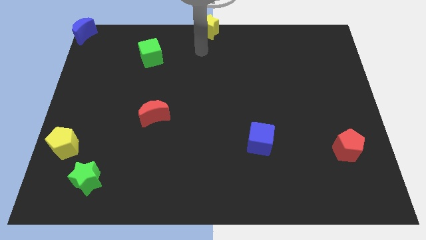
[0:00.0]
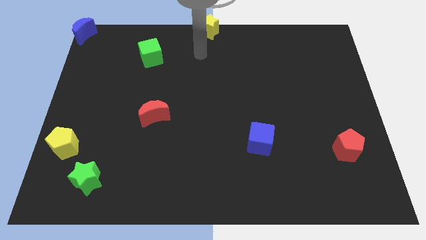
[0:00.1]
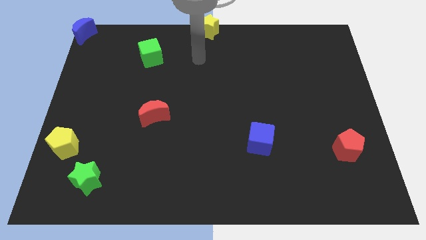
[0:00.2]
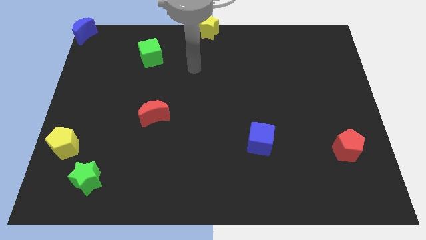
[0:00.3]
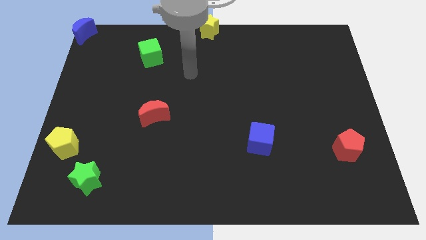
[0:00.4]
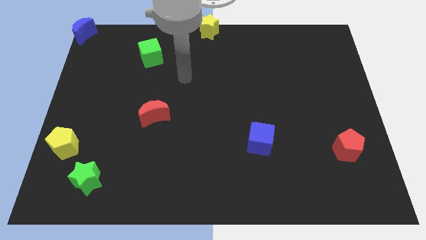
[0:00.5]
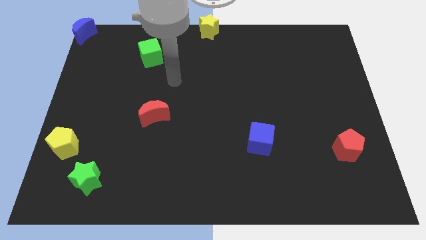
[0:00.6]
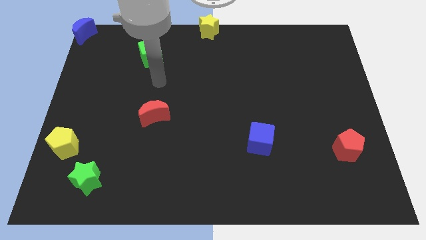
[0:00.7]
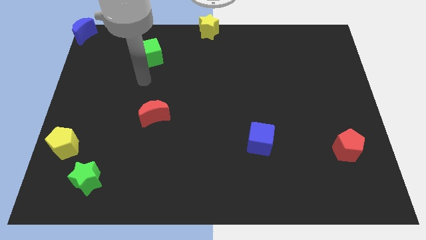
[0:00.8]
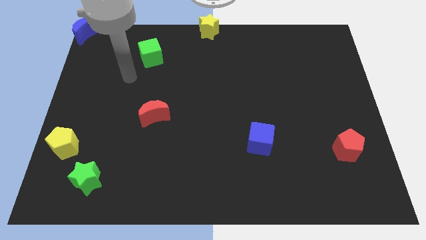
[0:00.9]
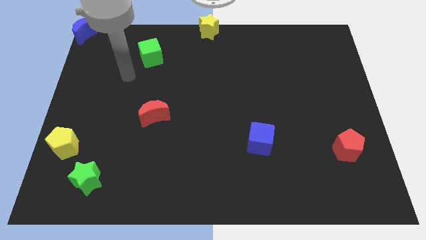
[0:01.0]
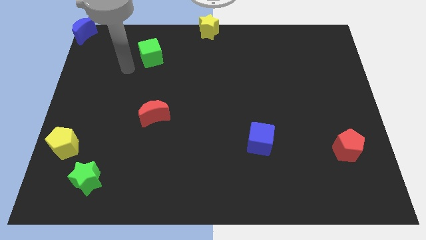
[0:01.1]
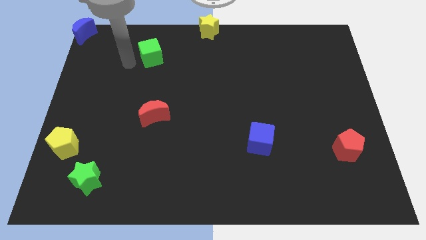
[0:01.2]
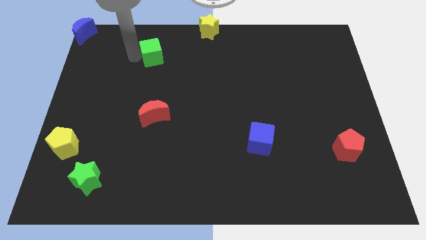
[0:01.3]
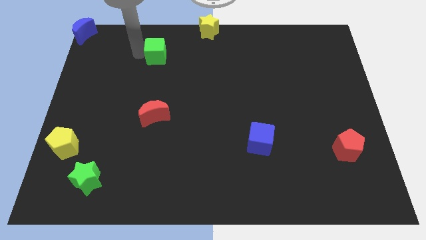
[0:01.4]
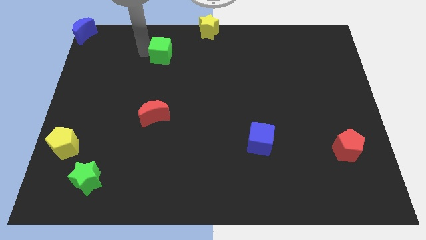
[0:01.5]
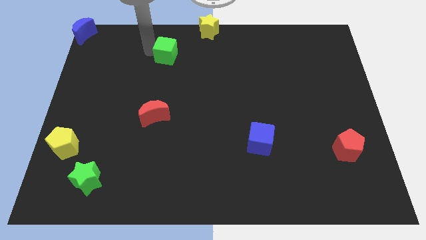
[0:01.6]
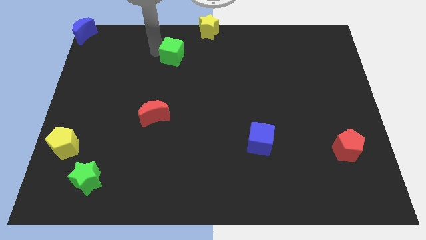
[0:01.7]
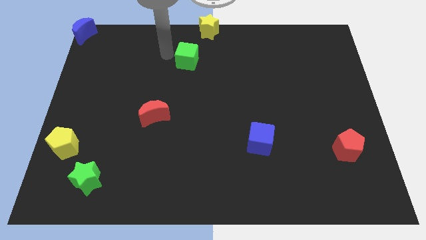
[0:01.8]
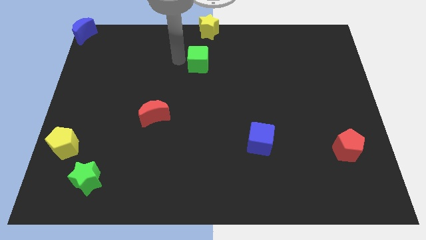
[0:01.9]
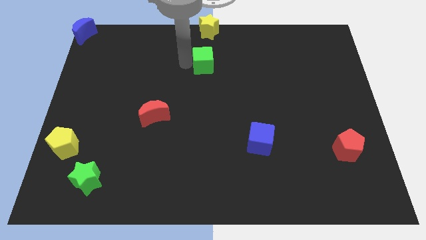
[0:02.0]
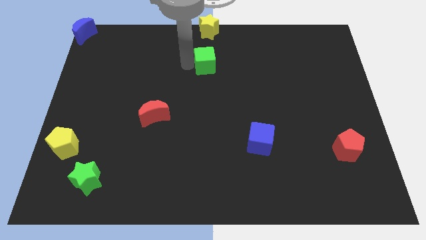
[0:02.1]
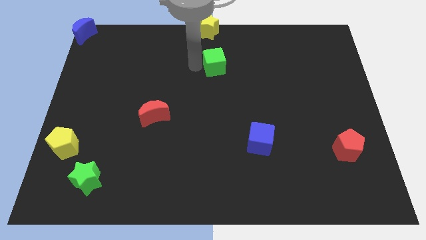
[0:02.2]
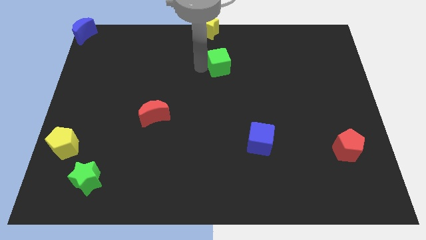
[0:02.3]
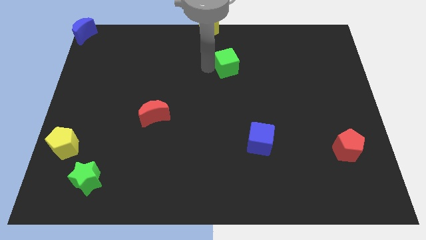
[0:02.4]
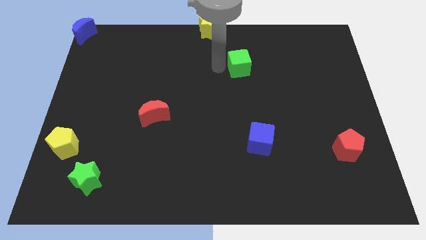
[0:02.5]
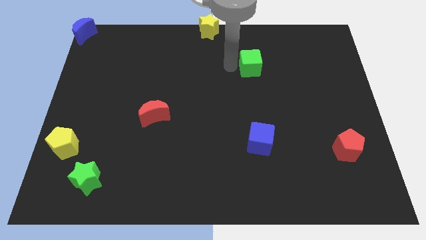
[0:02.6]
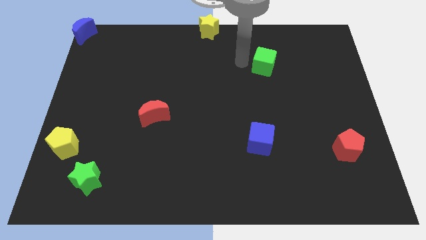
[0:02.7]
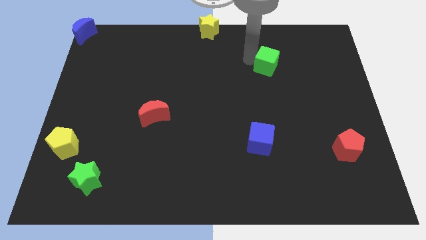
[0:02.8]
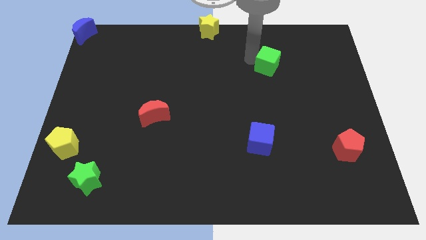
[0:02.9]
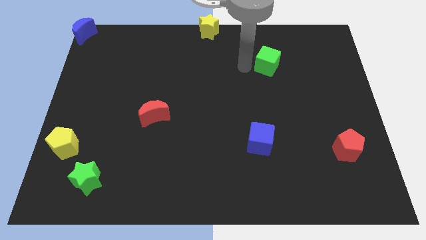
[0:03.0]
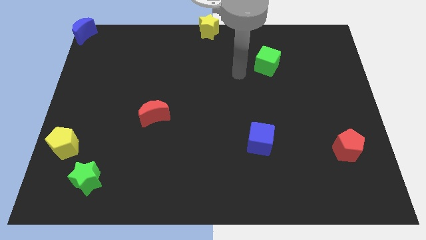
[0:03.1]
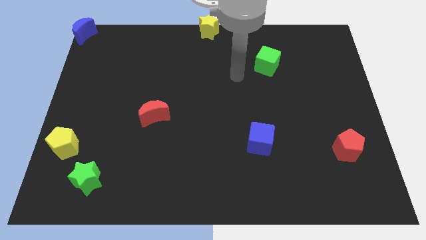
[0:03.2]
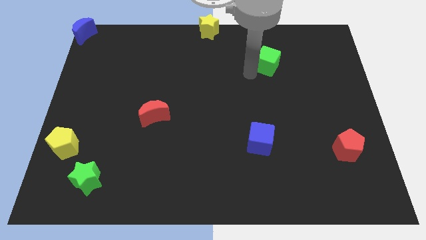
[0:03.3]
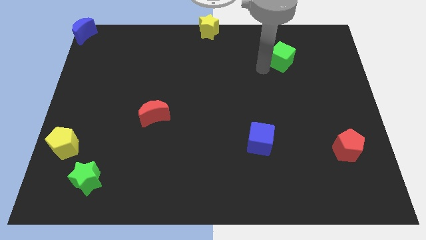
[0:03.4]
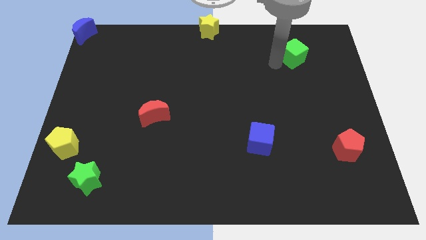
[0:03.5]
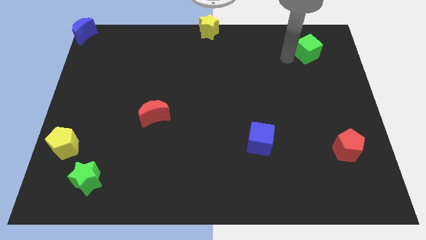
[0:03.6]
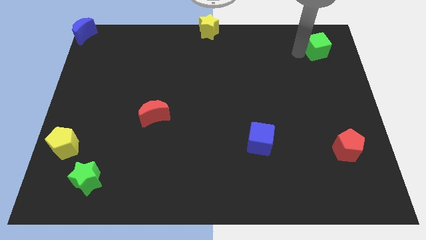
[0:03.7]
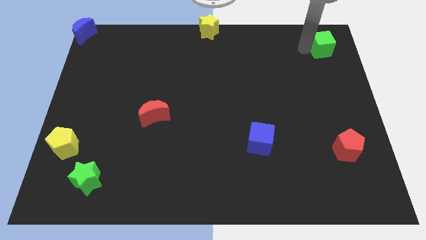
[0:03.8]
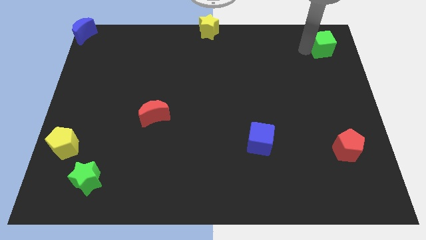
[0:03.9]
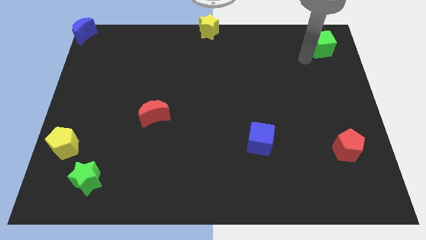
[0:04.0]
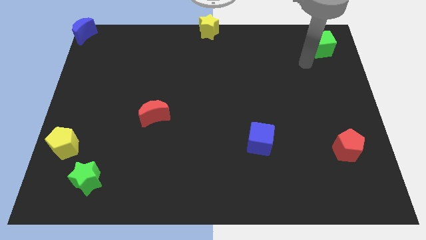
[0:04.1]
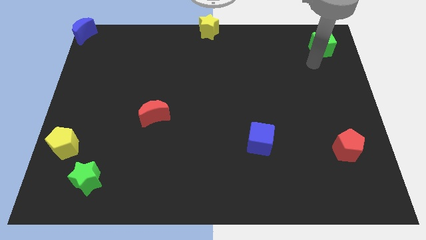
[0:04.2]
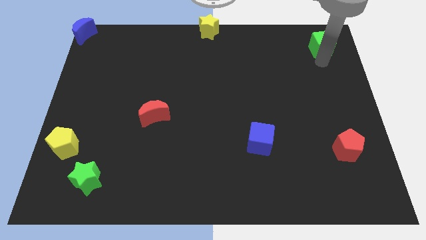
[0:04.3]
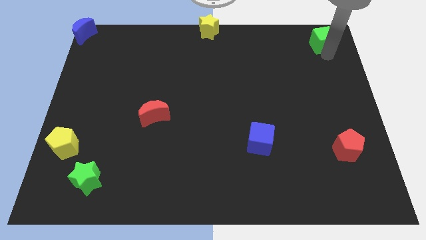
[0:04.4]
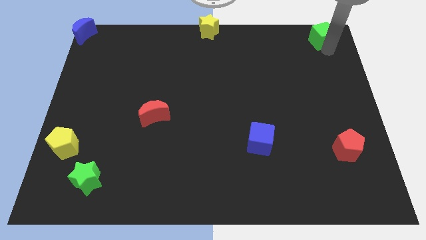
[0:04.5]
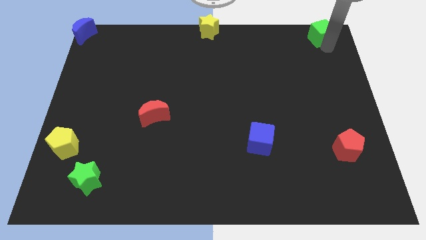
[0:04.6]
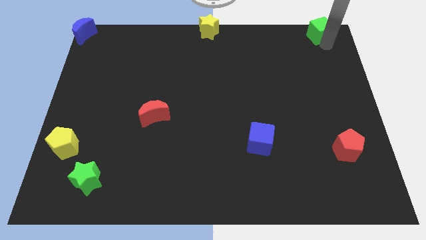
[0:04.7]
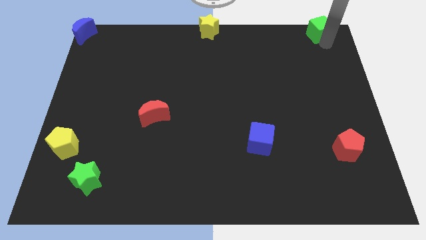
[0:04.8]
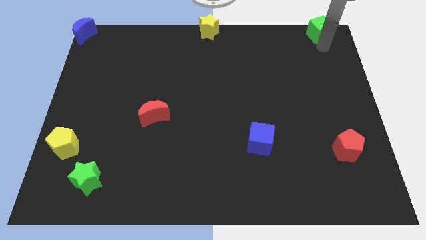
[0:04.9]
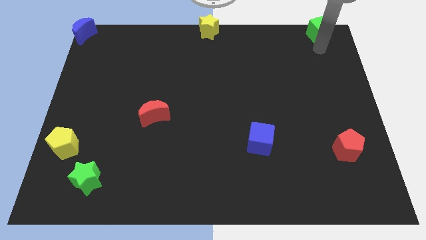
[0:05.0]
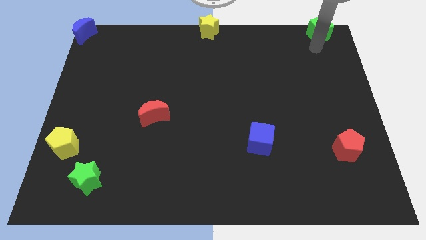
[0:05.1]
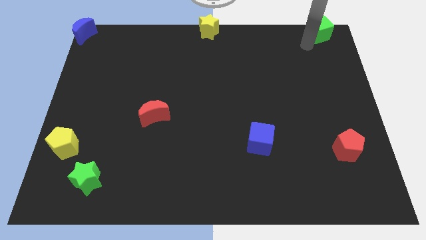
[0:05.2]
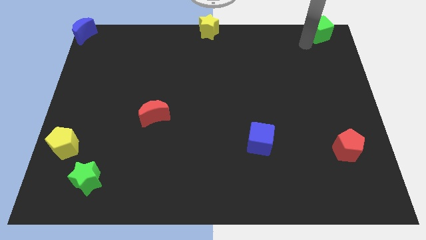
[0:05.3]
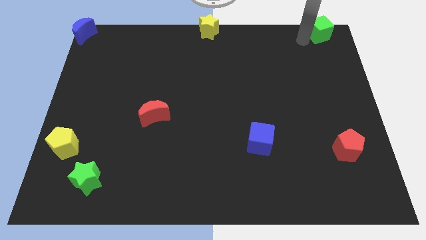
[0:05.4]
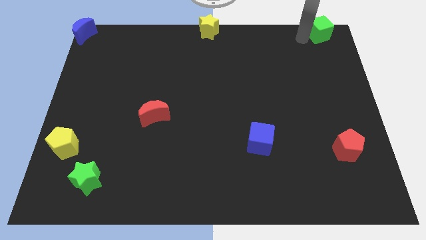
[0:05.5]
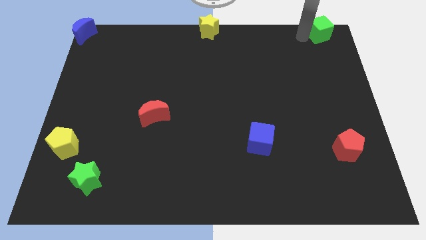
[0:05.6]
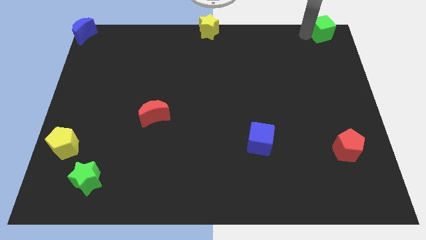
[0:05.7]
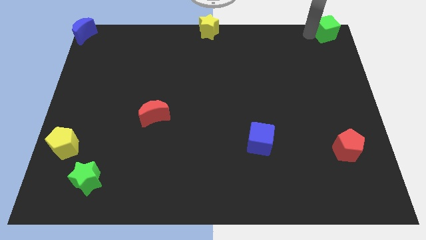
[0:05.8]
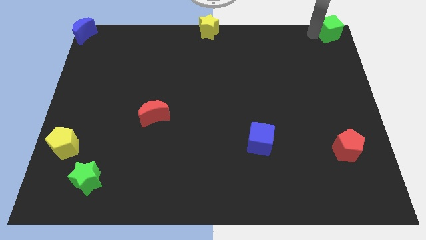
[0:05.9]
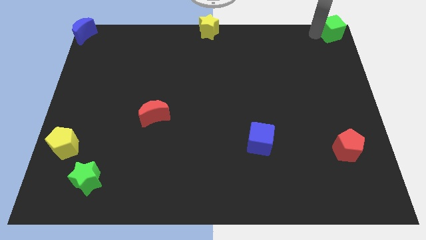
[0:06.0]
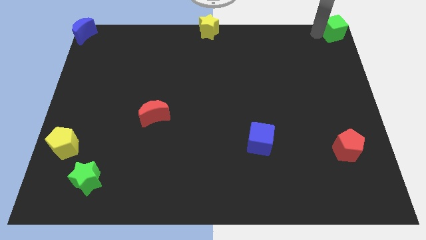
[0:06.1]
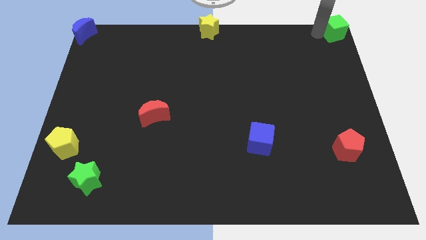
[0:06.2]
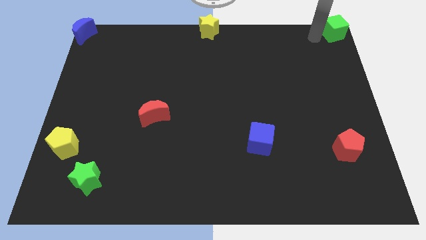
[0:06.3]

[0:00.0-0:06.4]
push the green cube to the top right corner

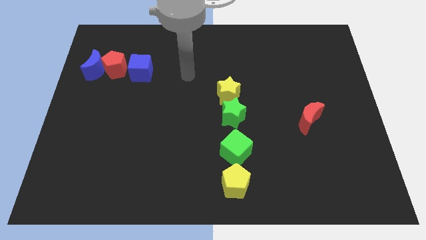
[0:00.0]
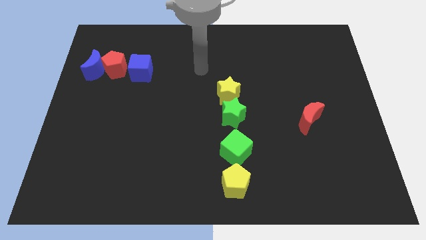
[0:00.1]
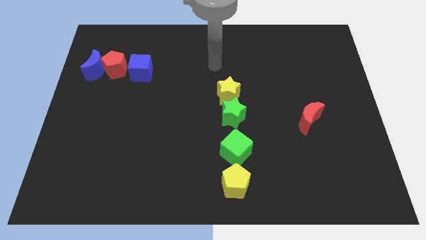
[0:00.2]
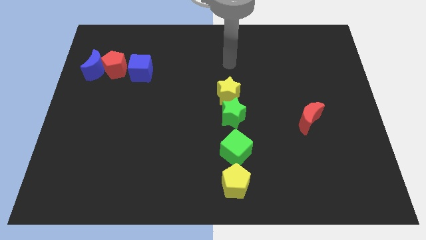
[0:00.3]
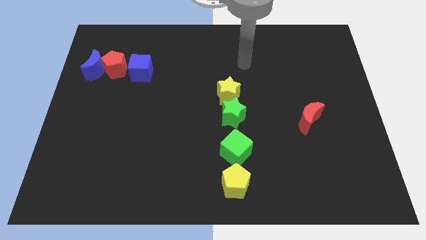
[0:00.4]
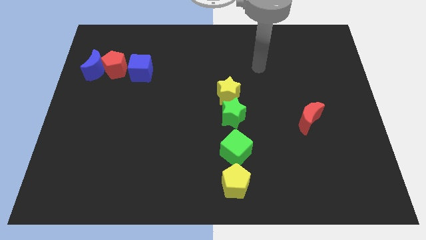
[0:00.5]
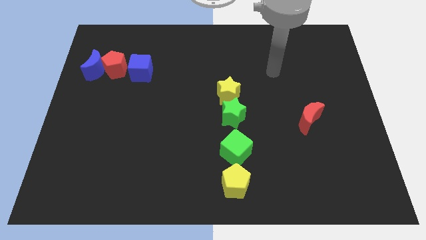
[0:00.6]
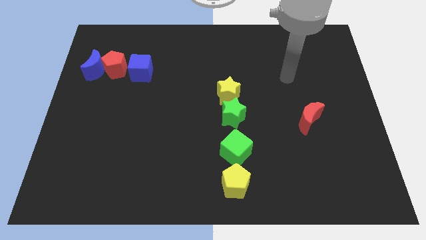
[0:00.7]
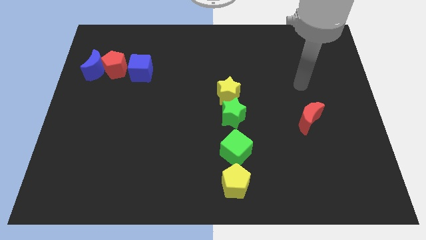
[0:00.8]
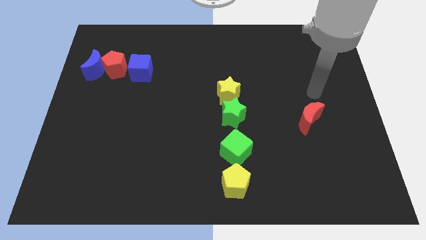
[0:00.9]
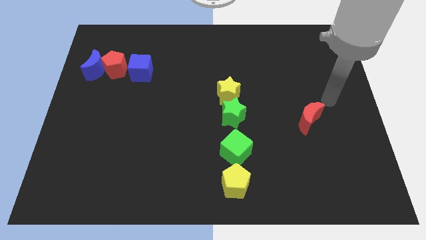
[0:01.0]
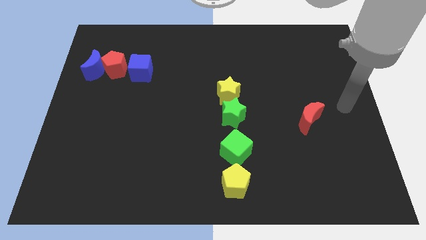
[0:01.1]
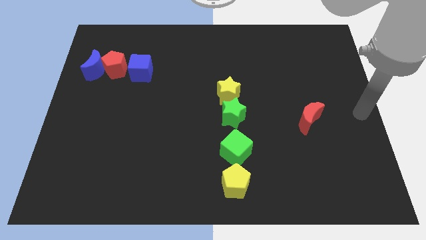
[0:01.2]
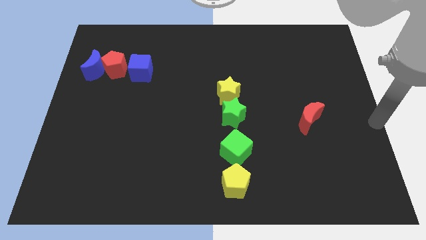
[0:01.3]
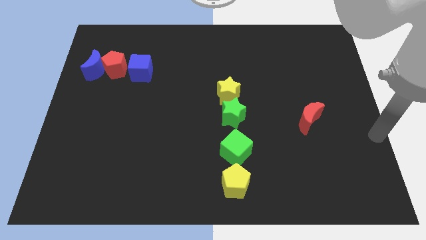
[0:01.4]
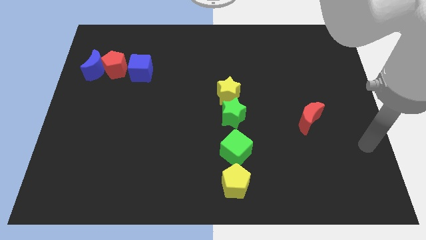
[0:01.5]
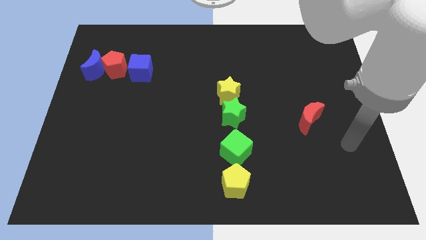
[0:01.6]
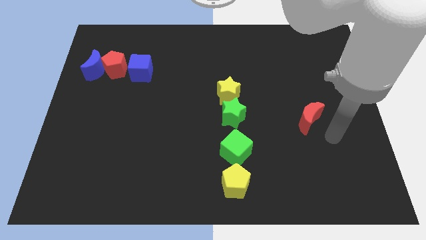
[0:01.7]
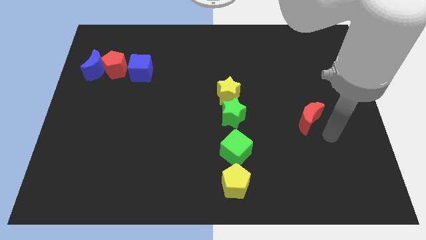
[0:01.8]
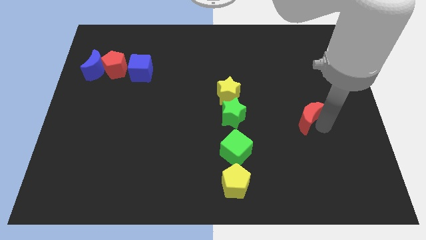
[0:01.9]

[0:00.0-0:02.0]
place your arm to right side of the red moon

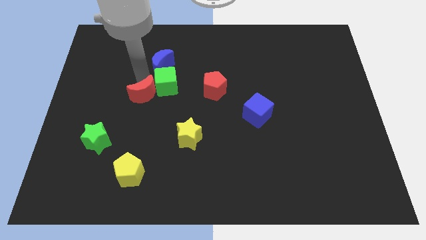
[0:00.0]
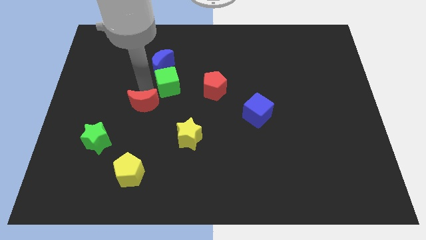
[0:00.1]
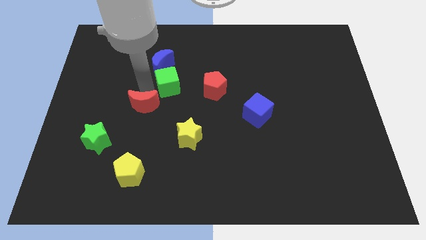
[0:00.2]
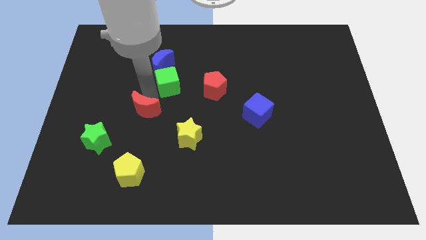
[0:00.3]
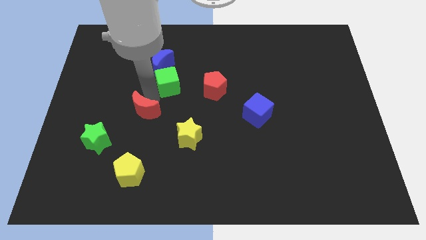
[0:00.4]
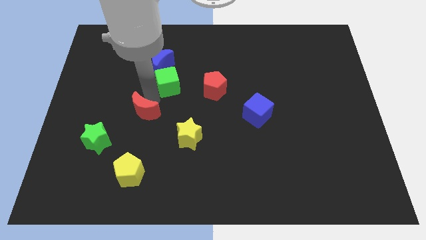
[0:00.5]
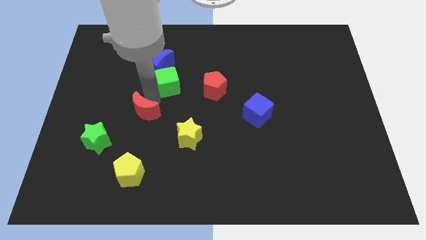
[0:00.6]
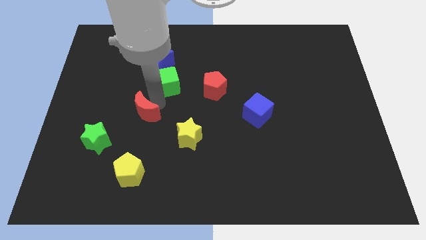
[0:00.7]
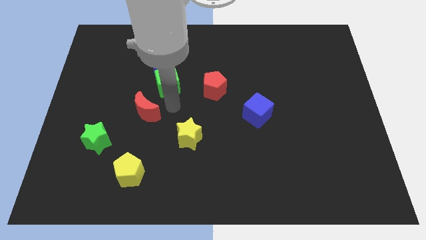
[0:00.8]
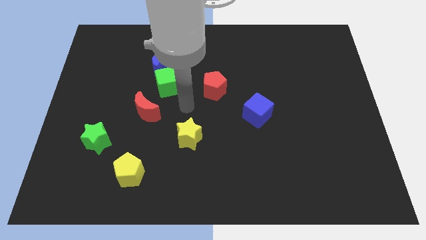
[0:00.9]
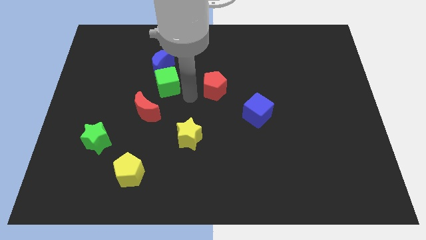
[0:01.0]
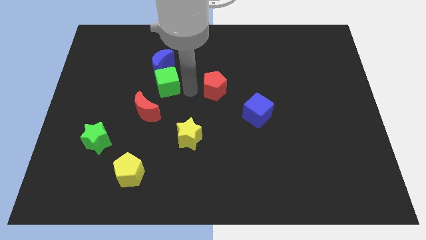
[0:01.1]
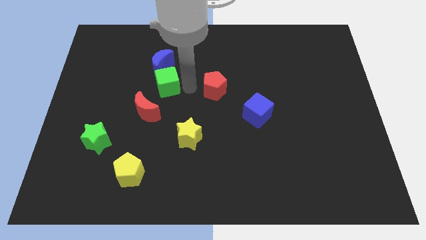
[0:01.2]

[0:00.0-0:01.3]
put your arm to the bottom right side of the green cube
